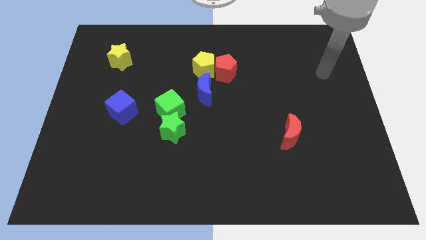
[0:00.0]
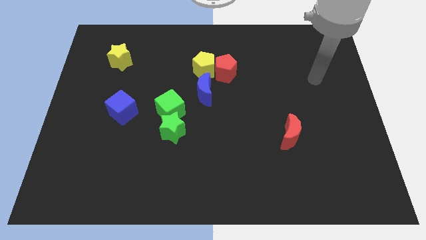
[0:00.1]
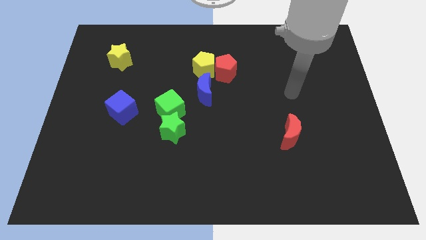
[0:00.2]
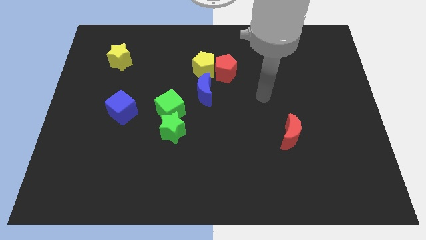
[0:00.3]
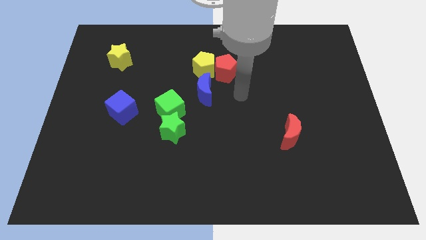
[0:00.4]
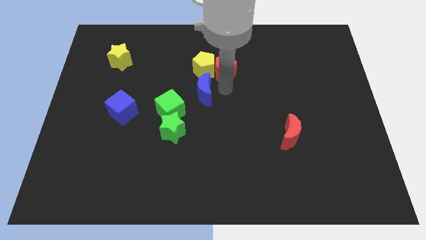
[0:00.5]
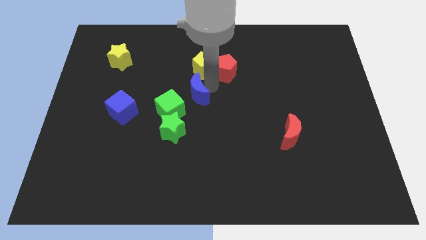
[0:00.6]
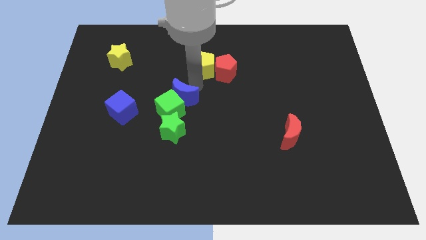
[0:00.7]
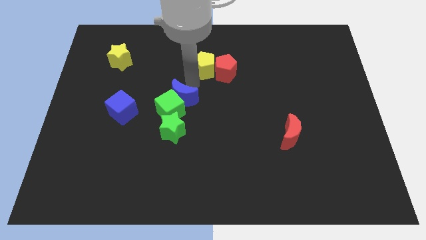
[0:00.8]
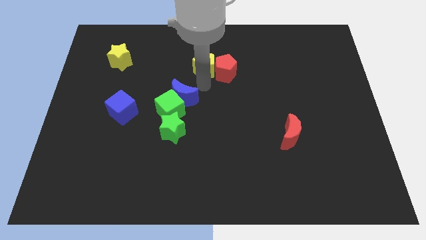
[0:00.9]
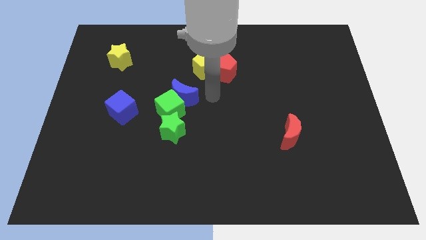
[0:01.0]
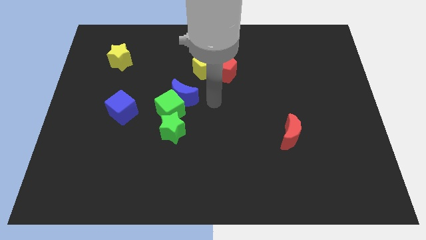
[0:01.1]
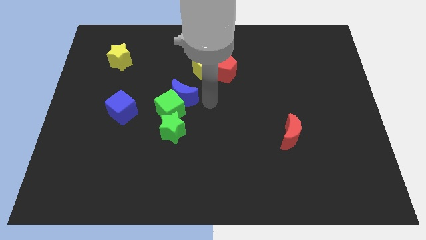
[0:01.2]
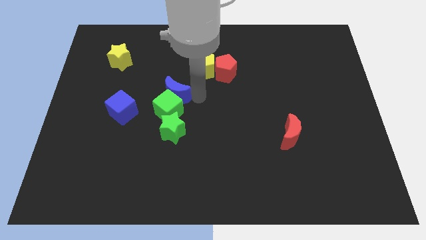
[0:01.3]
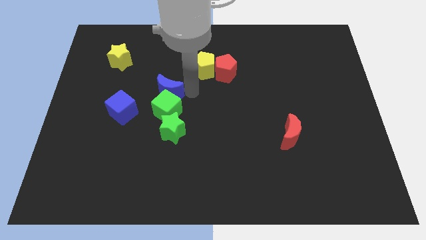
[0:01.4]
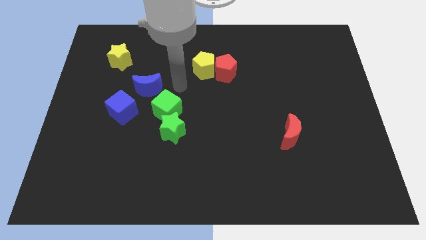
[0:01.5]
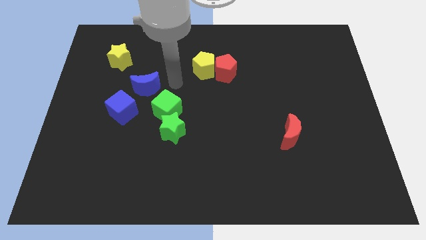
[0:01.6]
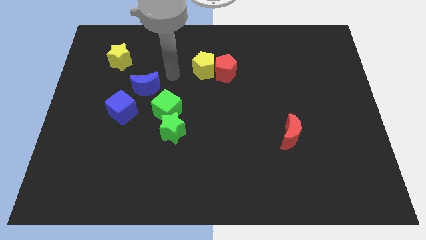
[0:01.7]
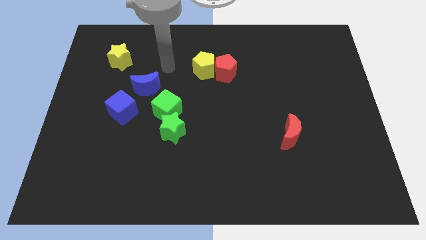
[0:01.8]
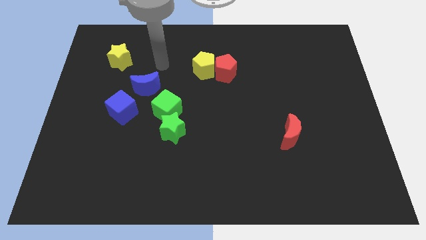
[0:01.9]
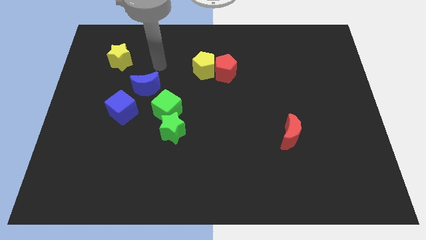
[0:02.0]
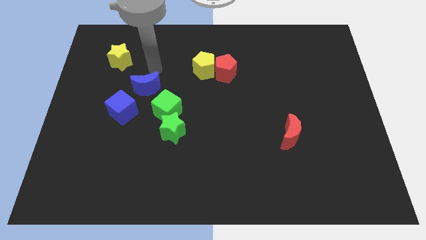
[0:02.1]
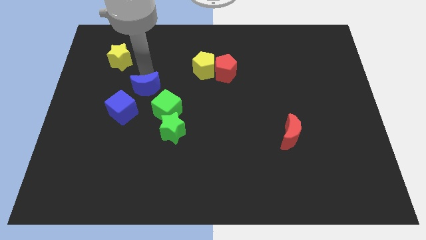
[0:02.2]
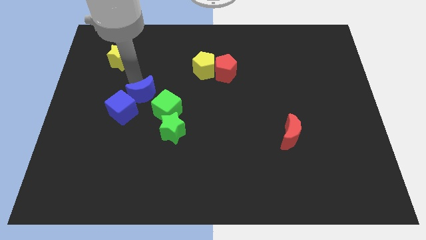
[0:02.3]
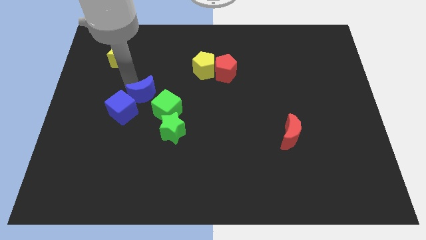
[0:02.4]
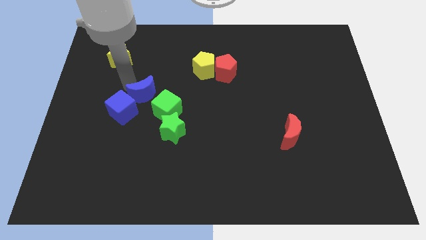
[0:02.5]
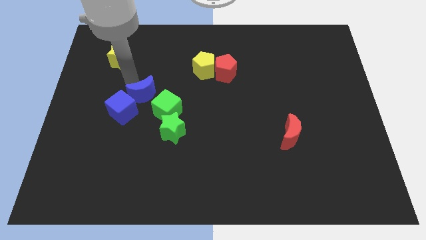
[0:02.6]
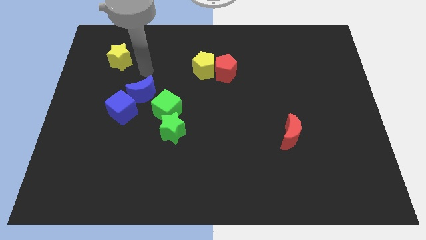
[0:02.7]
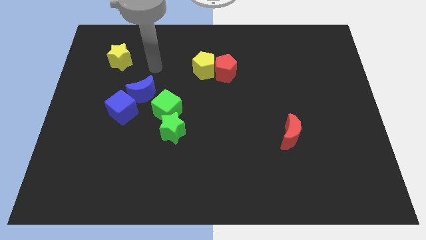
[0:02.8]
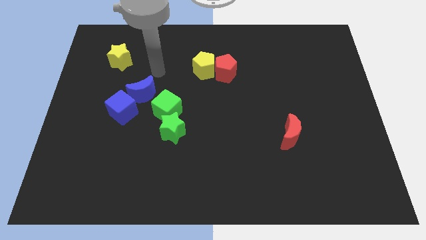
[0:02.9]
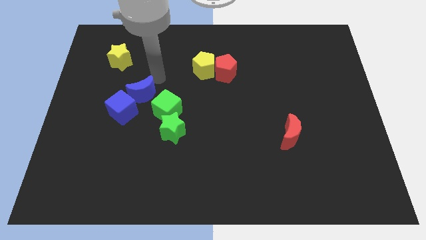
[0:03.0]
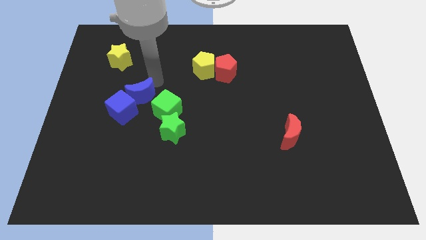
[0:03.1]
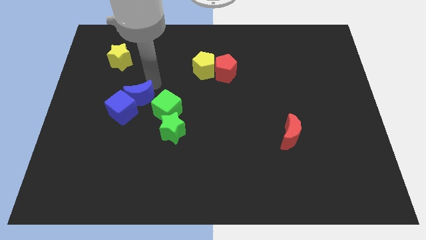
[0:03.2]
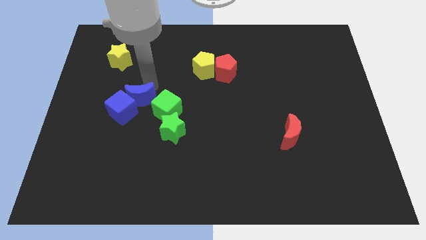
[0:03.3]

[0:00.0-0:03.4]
move the blue moon close to the blue cube

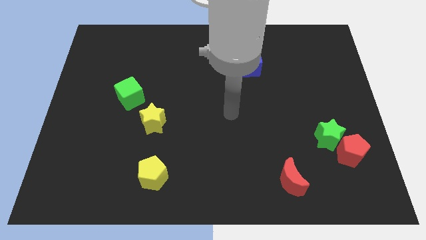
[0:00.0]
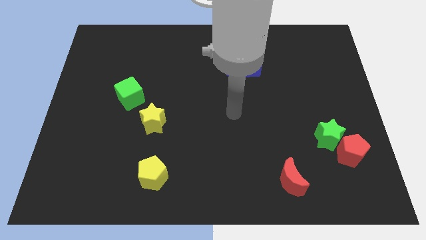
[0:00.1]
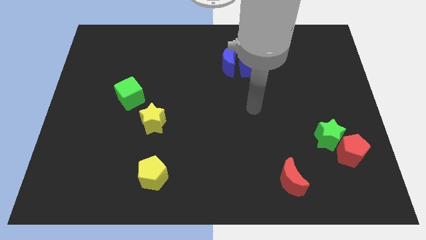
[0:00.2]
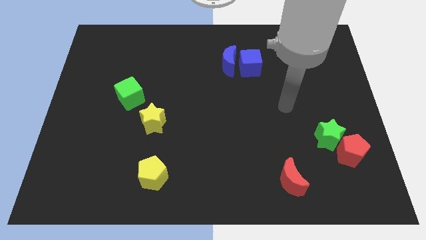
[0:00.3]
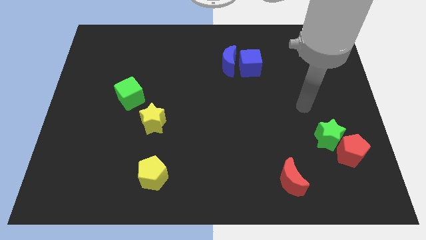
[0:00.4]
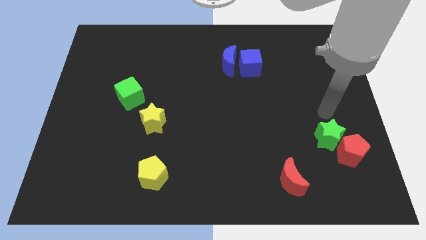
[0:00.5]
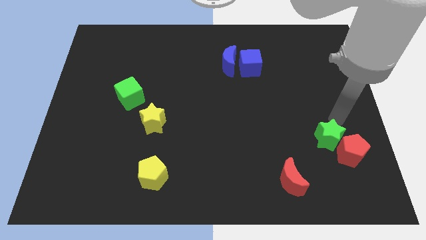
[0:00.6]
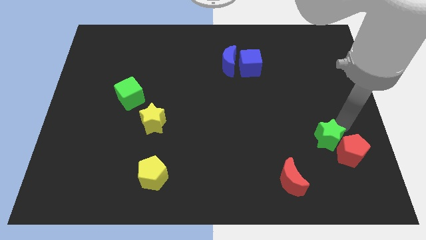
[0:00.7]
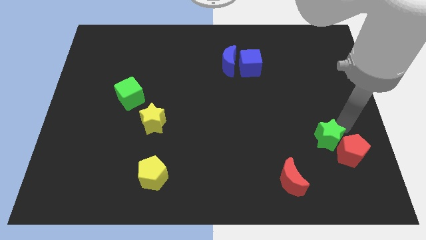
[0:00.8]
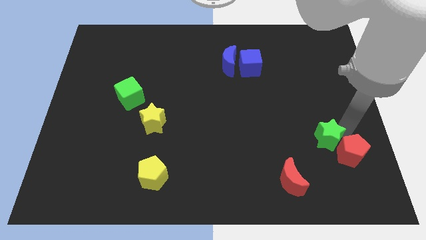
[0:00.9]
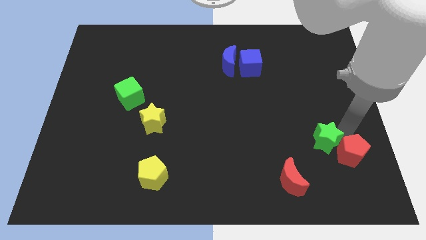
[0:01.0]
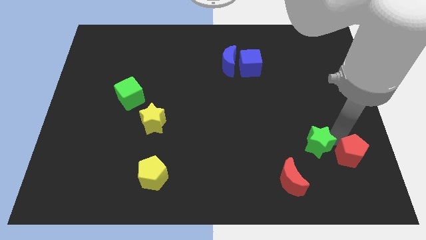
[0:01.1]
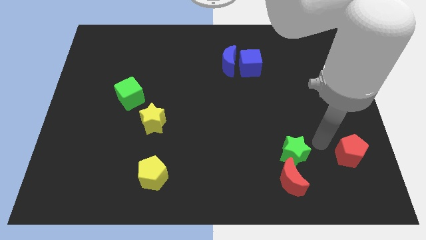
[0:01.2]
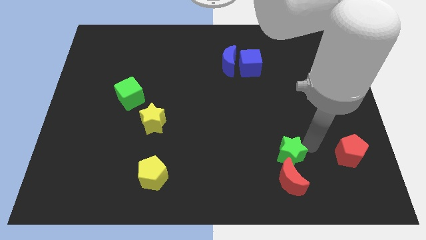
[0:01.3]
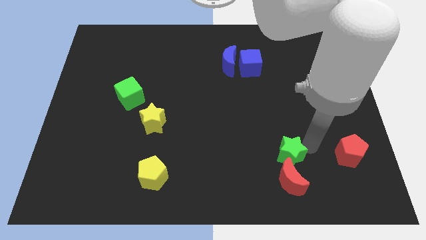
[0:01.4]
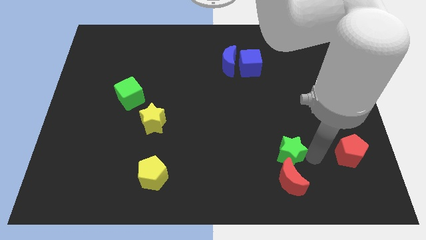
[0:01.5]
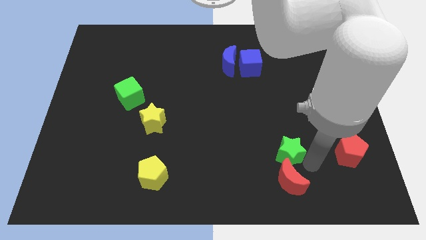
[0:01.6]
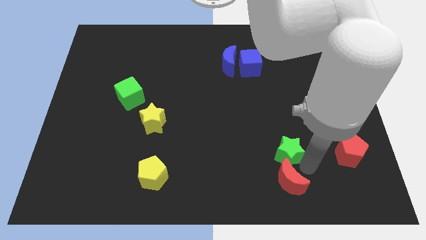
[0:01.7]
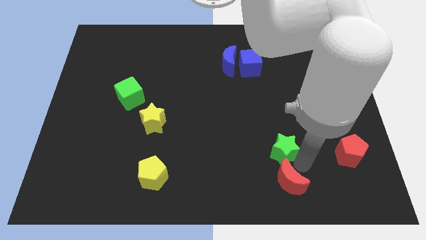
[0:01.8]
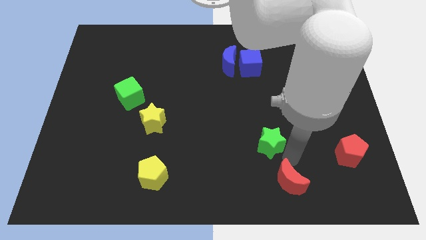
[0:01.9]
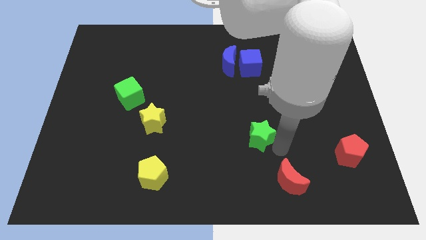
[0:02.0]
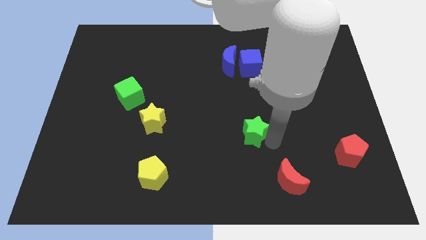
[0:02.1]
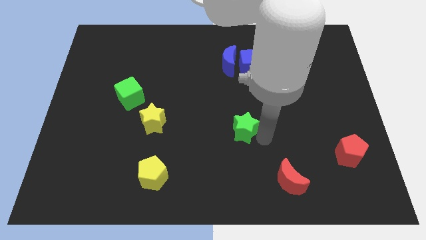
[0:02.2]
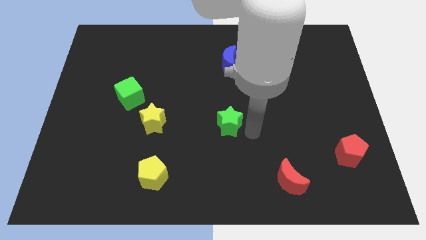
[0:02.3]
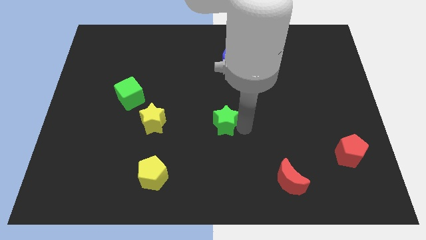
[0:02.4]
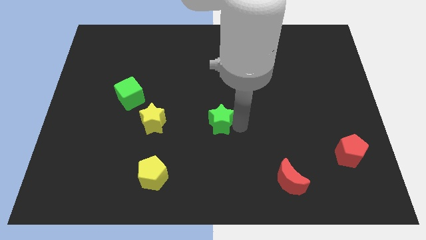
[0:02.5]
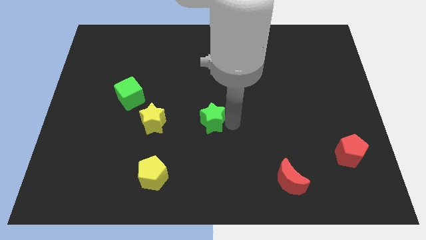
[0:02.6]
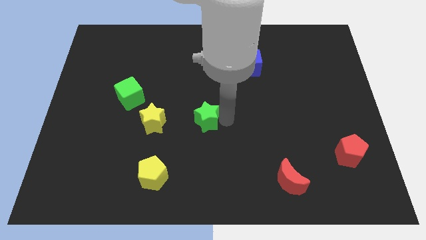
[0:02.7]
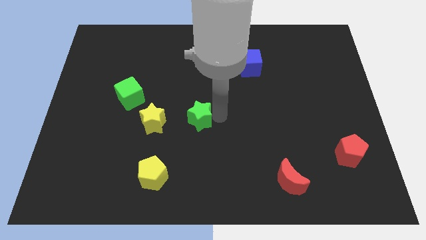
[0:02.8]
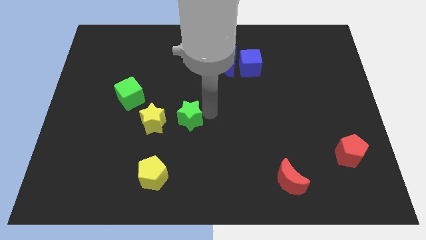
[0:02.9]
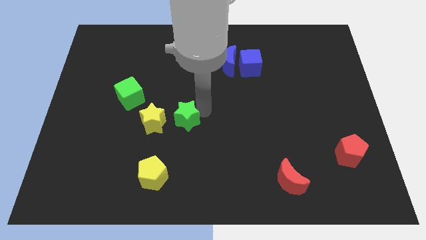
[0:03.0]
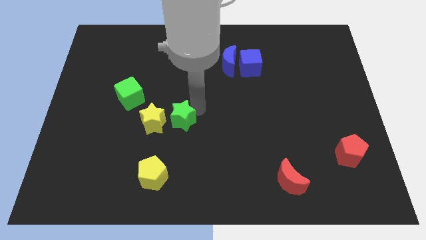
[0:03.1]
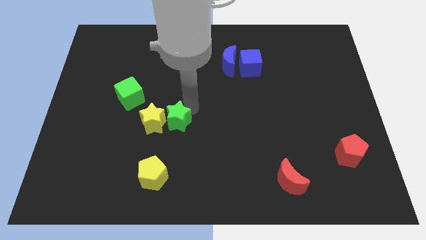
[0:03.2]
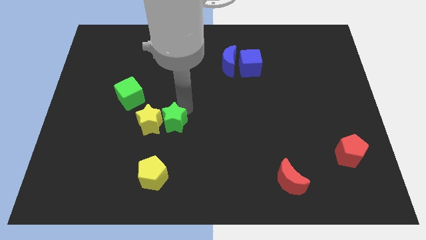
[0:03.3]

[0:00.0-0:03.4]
move the green star close to the yellow star

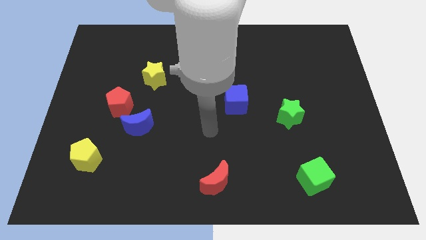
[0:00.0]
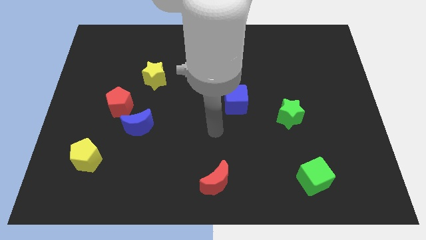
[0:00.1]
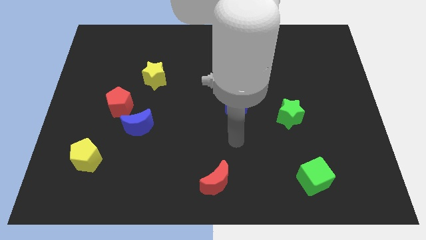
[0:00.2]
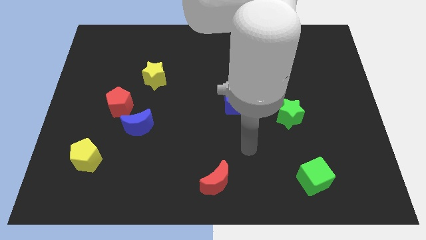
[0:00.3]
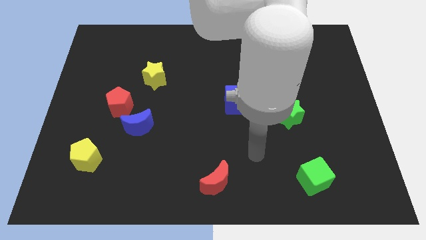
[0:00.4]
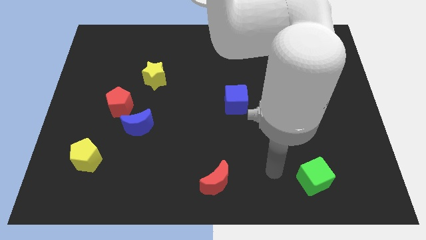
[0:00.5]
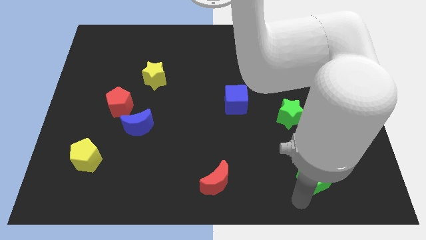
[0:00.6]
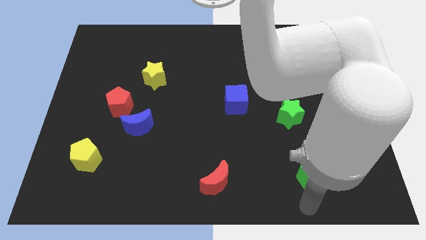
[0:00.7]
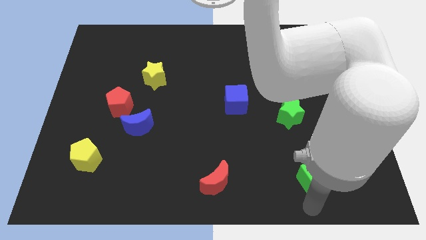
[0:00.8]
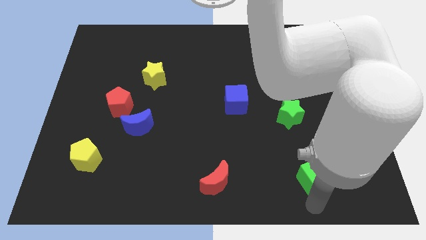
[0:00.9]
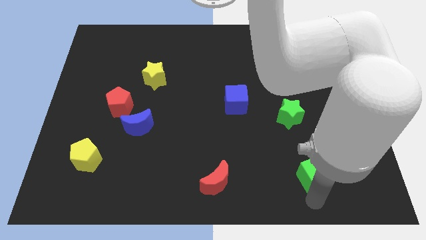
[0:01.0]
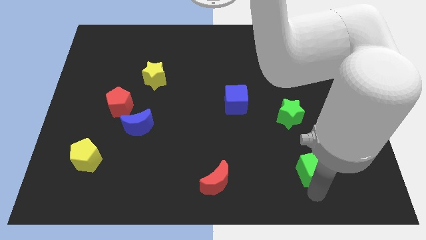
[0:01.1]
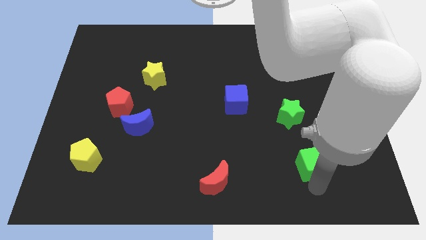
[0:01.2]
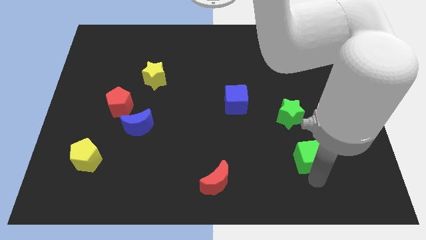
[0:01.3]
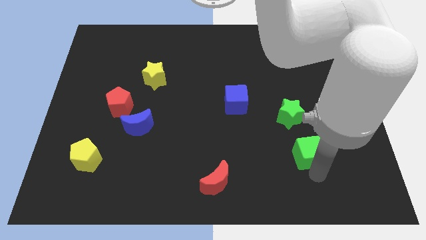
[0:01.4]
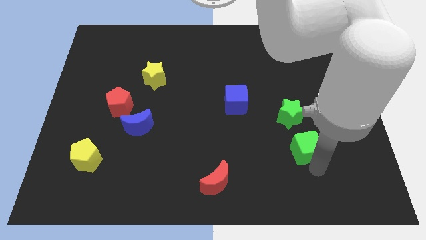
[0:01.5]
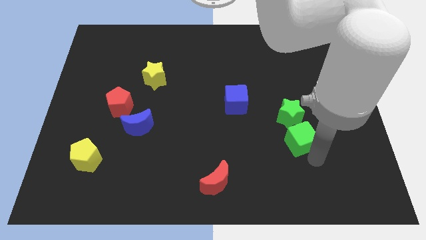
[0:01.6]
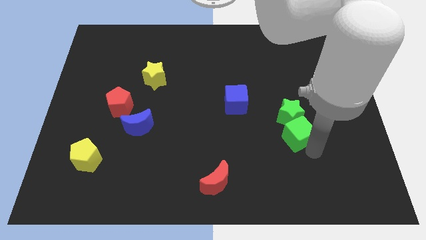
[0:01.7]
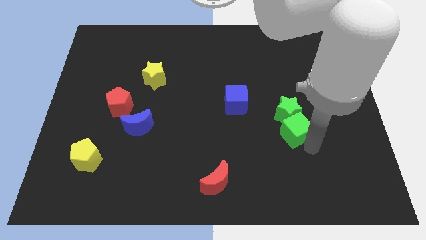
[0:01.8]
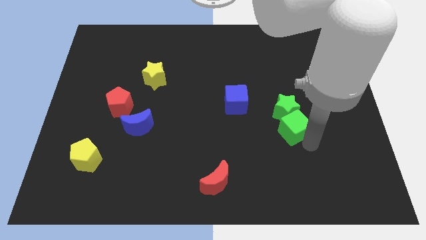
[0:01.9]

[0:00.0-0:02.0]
put the green cube towards the green star
